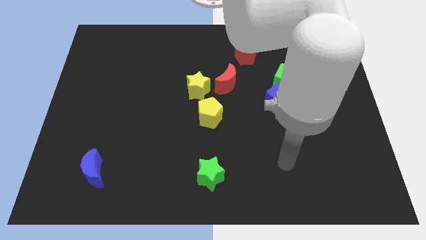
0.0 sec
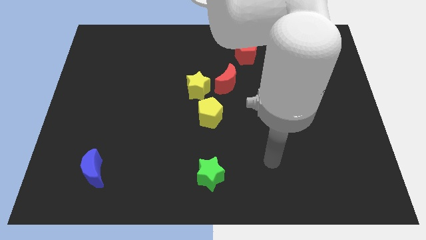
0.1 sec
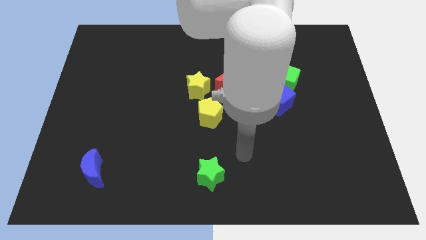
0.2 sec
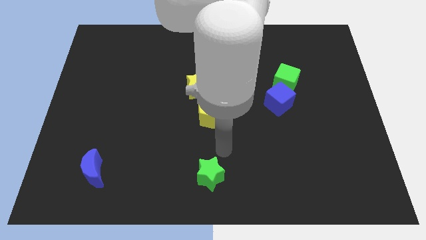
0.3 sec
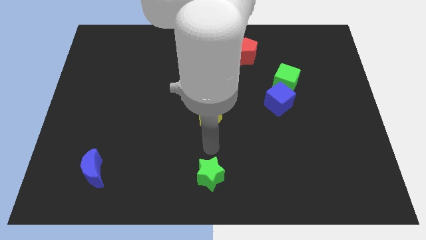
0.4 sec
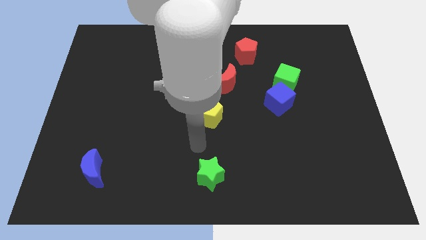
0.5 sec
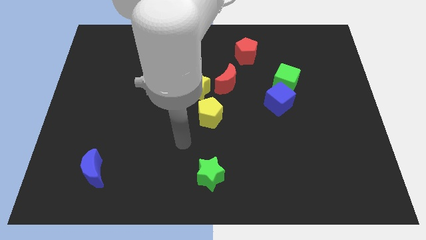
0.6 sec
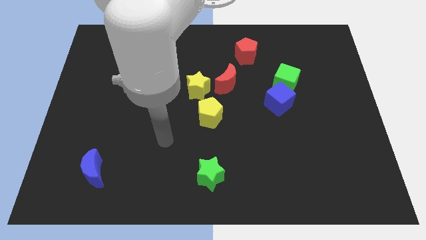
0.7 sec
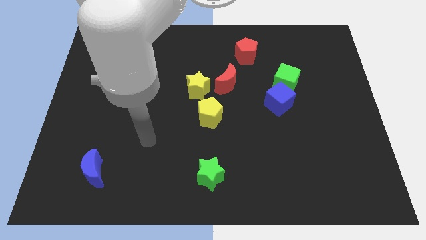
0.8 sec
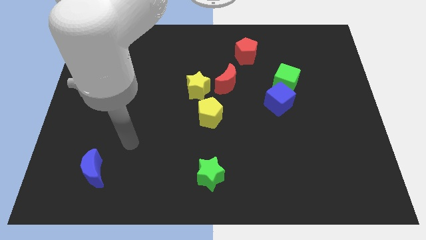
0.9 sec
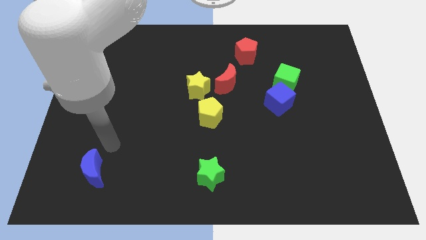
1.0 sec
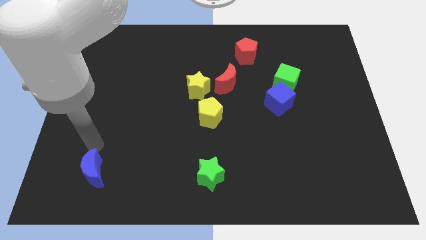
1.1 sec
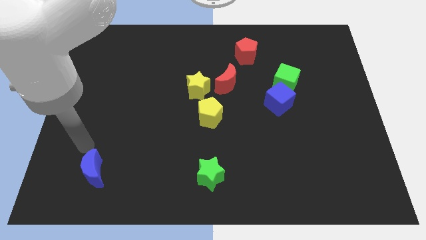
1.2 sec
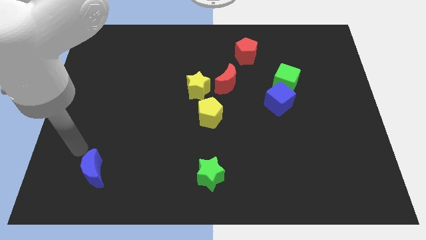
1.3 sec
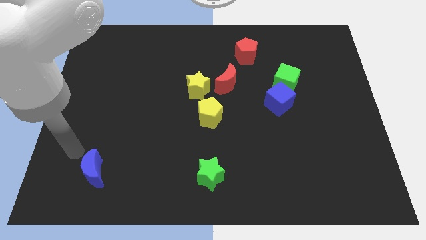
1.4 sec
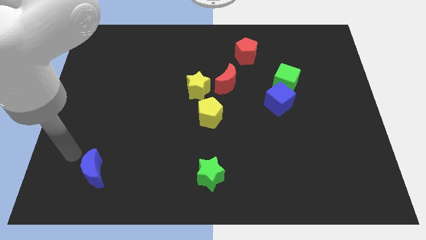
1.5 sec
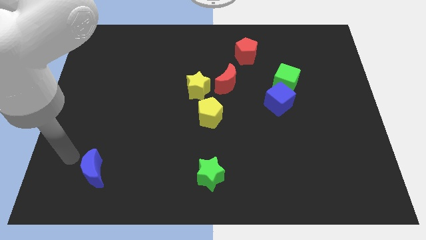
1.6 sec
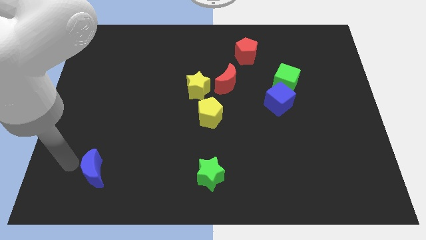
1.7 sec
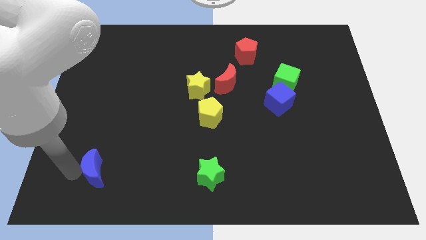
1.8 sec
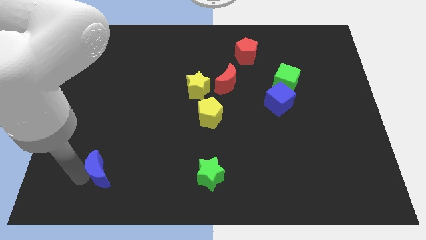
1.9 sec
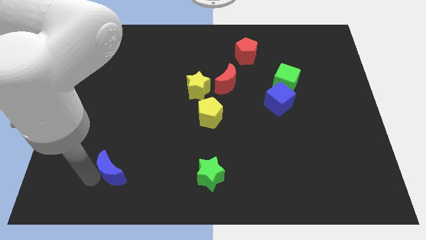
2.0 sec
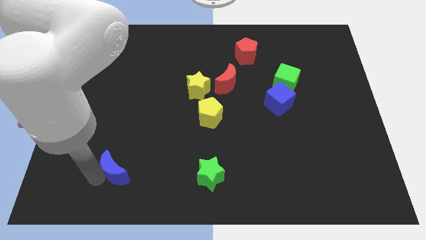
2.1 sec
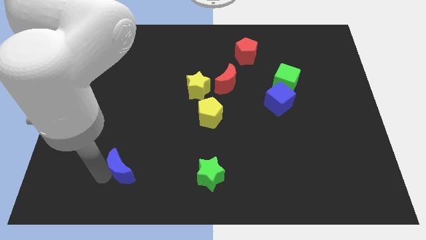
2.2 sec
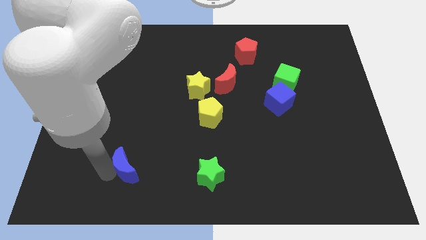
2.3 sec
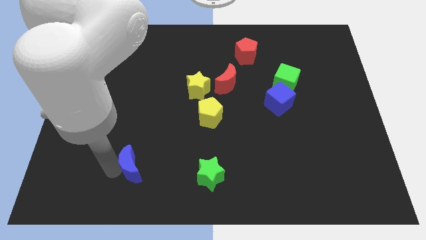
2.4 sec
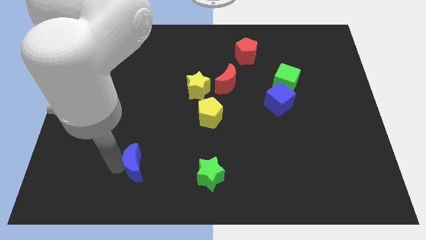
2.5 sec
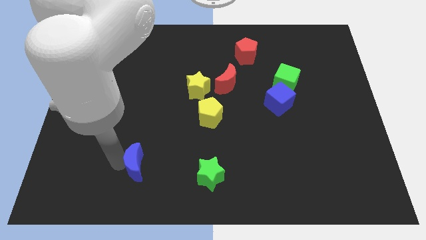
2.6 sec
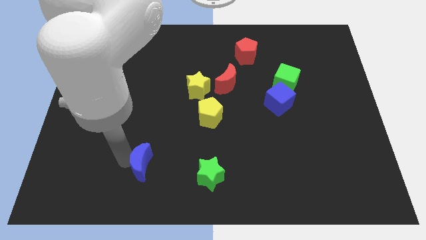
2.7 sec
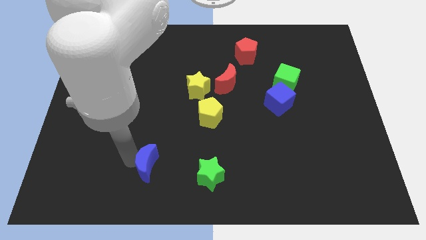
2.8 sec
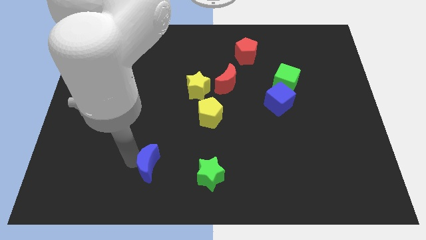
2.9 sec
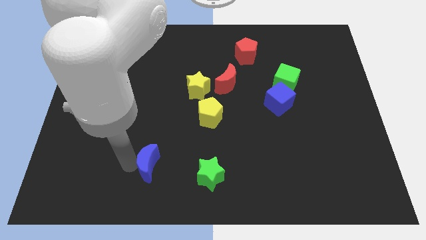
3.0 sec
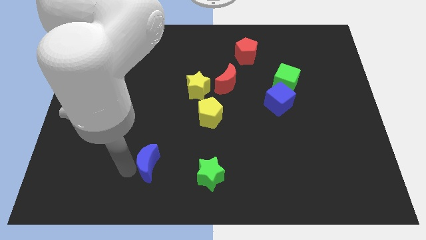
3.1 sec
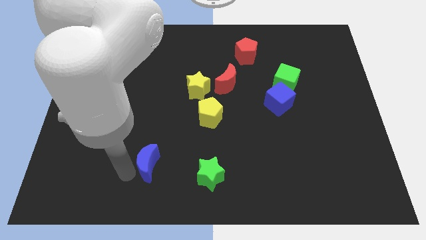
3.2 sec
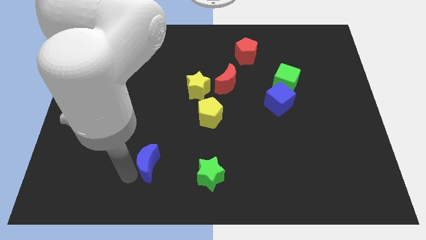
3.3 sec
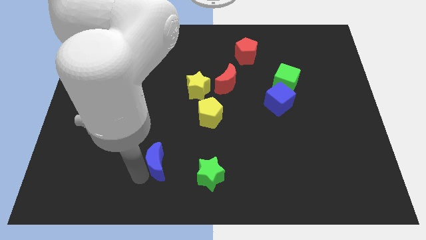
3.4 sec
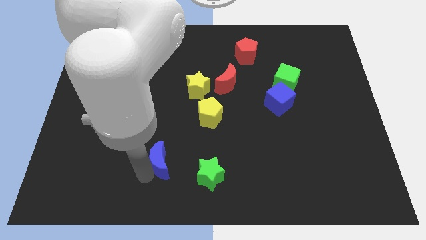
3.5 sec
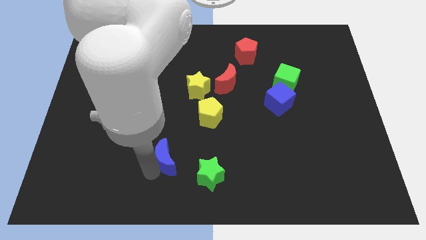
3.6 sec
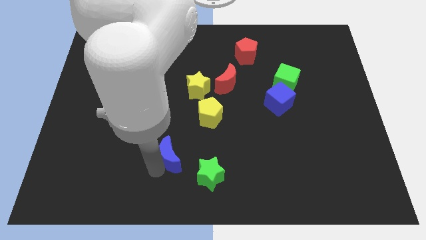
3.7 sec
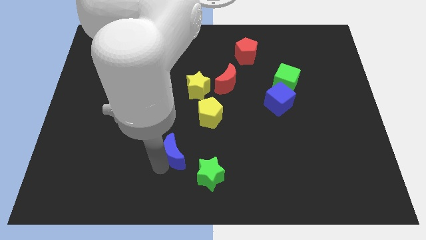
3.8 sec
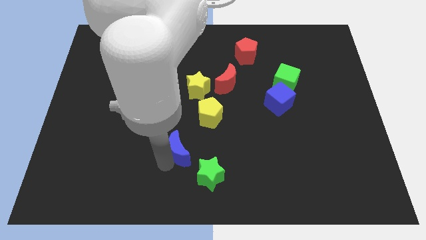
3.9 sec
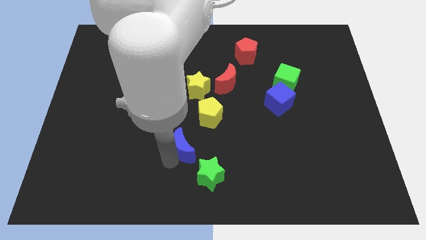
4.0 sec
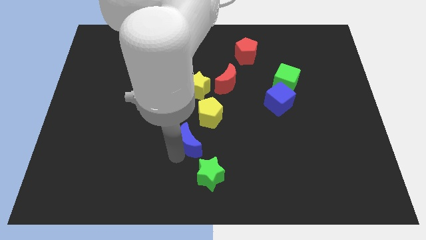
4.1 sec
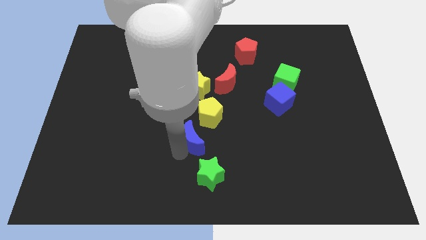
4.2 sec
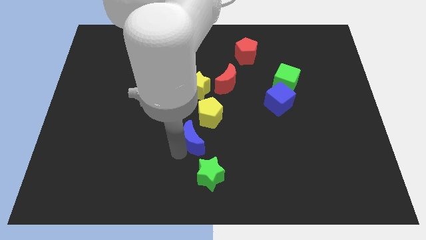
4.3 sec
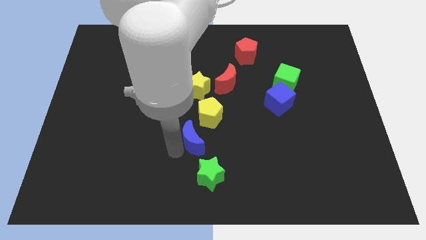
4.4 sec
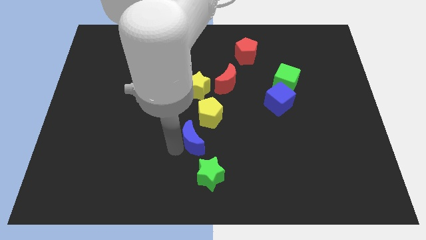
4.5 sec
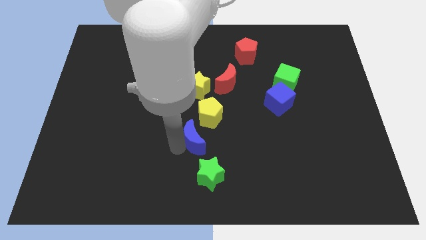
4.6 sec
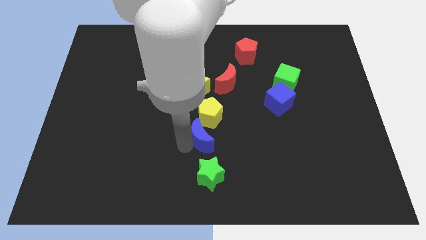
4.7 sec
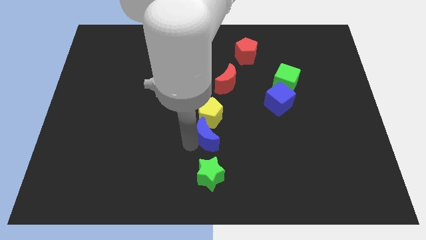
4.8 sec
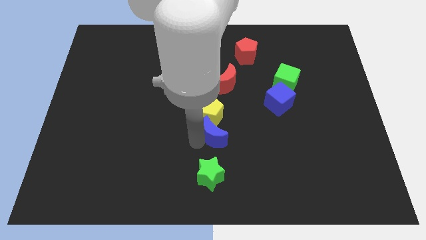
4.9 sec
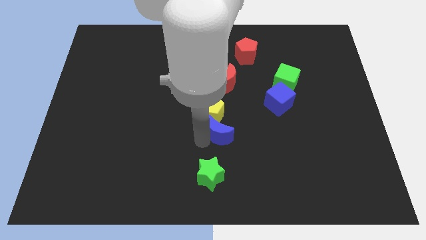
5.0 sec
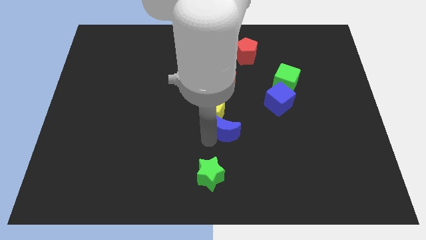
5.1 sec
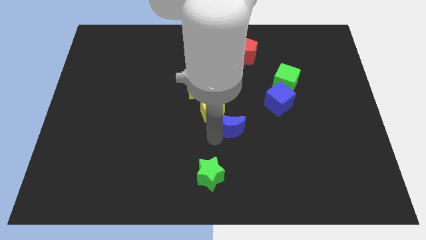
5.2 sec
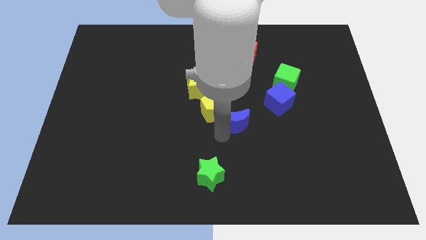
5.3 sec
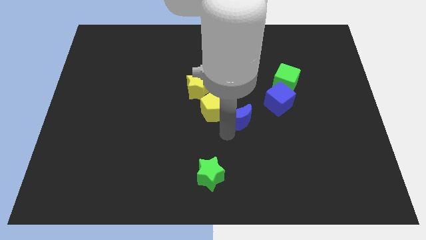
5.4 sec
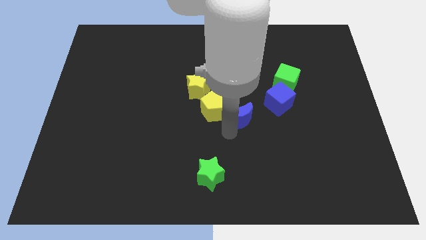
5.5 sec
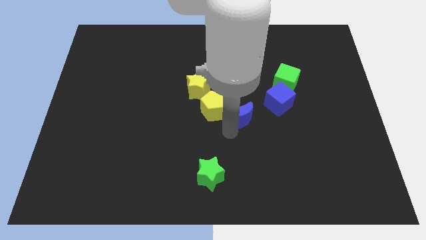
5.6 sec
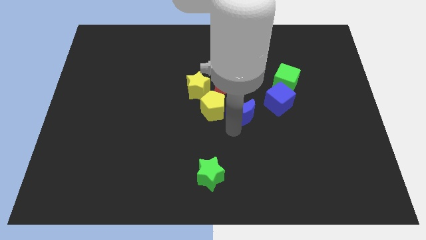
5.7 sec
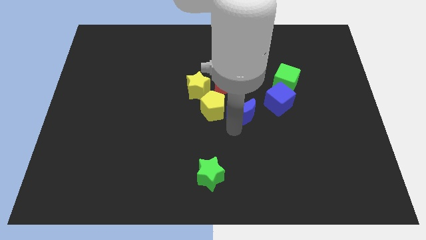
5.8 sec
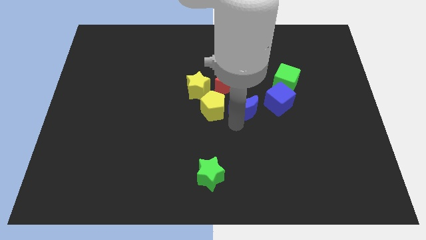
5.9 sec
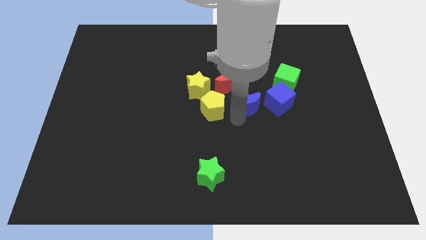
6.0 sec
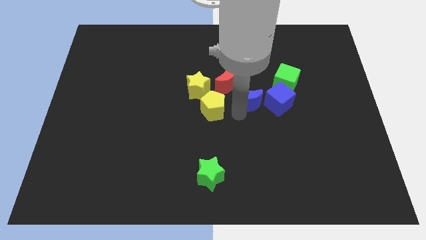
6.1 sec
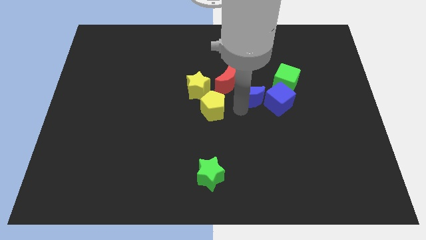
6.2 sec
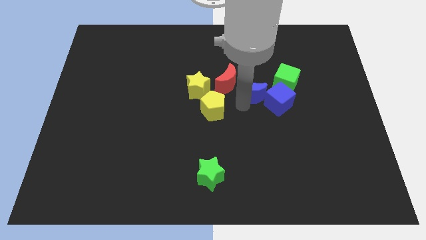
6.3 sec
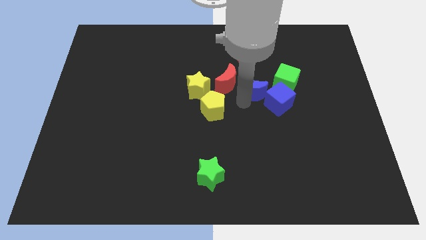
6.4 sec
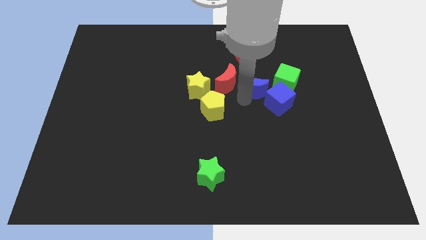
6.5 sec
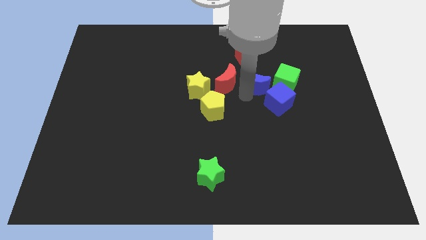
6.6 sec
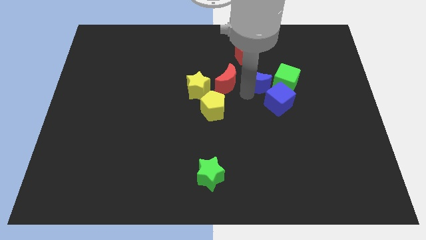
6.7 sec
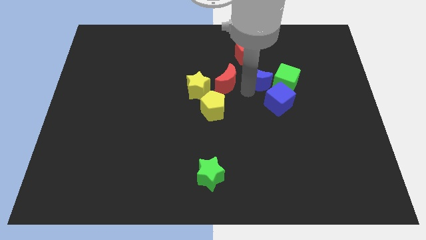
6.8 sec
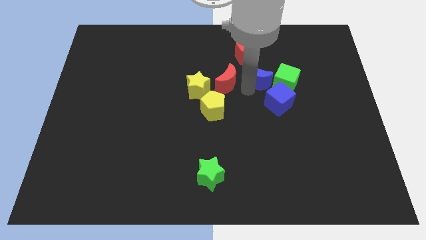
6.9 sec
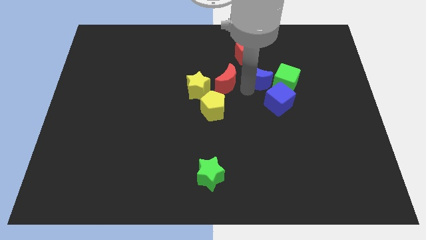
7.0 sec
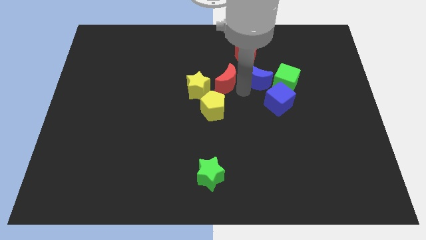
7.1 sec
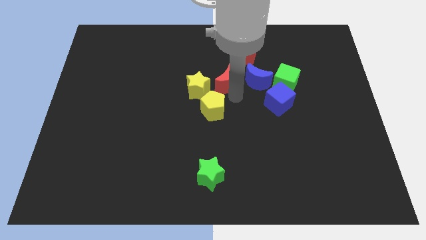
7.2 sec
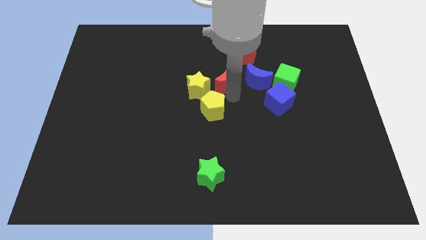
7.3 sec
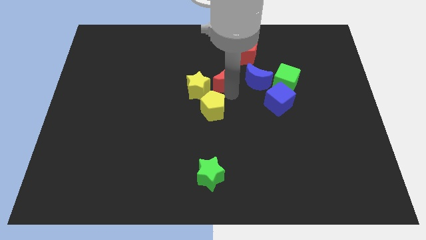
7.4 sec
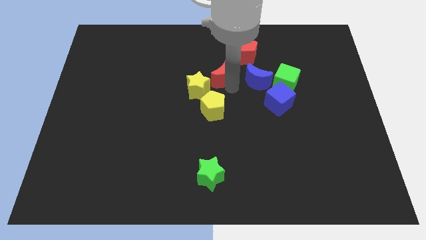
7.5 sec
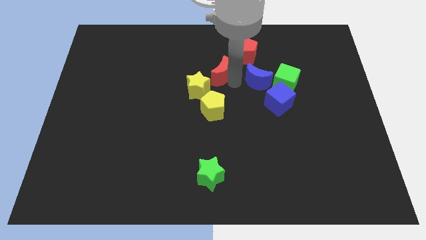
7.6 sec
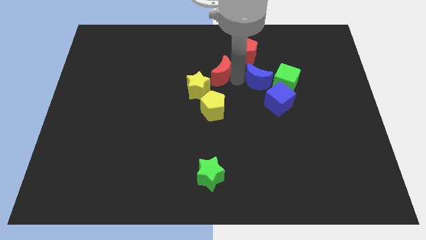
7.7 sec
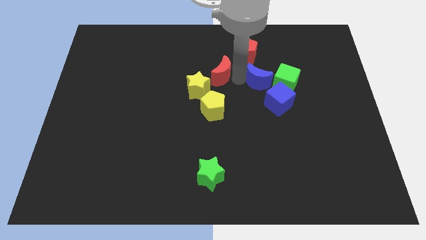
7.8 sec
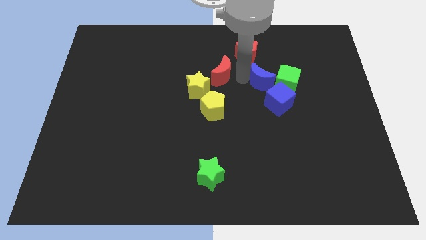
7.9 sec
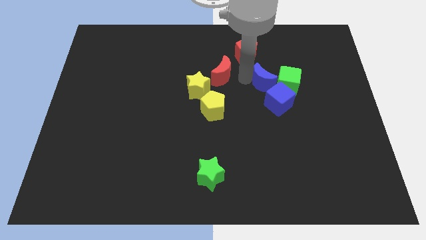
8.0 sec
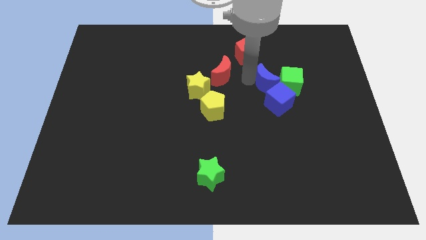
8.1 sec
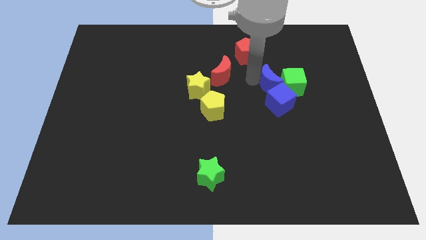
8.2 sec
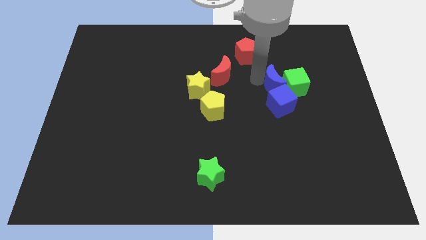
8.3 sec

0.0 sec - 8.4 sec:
put the blue moon close to the green cube

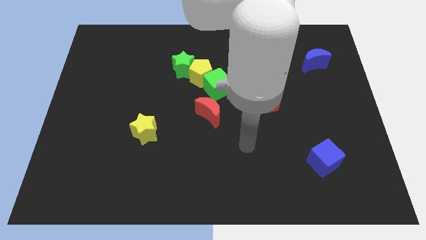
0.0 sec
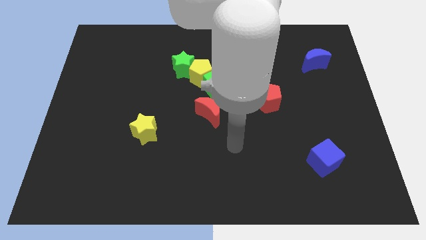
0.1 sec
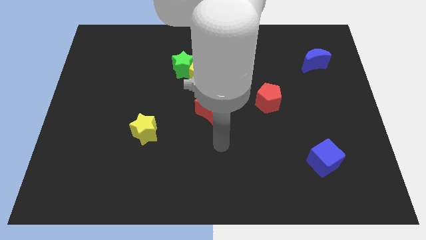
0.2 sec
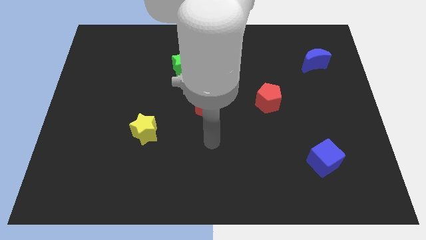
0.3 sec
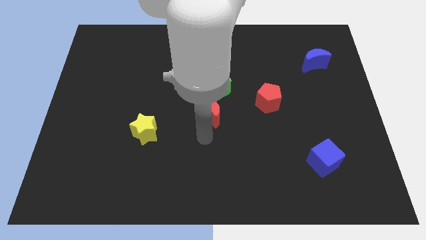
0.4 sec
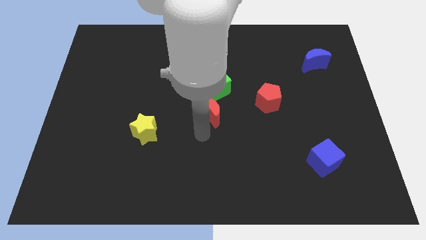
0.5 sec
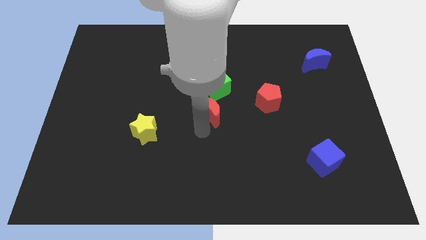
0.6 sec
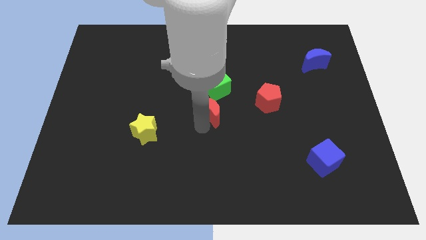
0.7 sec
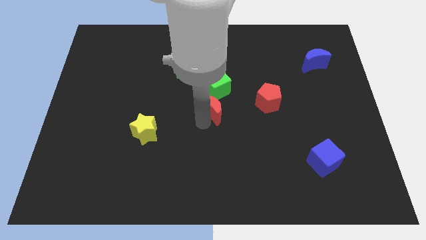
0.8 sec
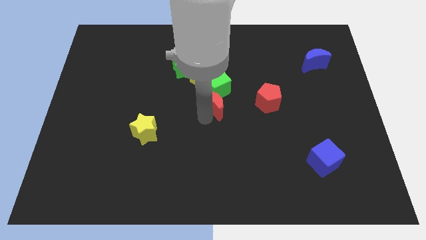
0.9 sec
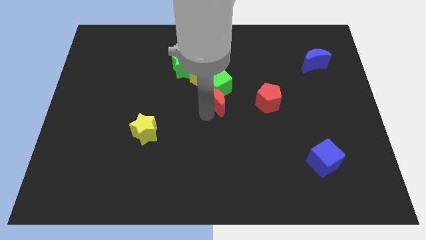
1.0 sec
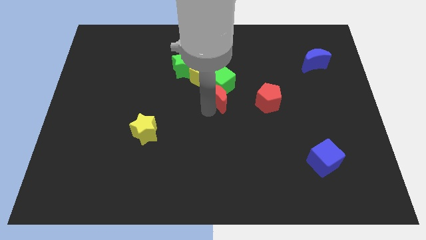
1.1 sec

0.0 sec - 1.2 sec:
push the red moon next to the green cube
